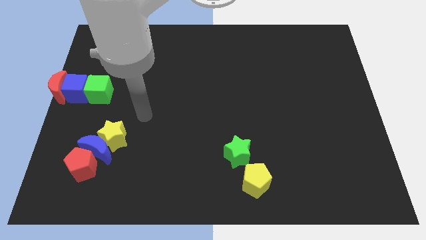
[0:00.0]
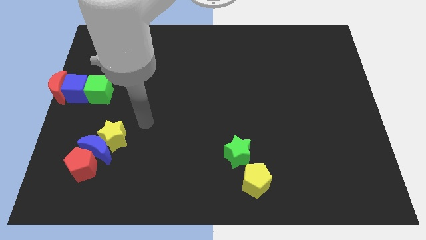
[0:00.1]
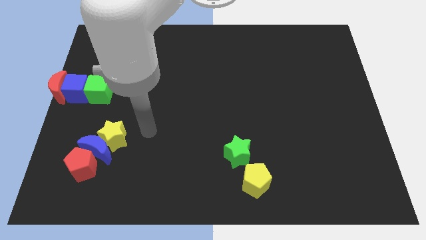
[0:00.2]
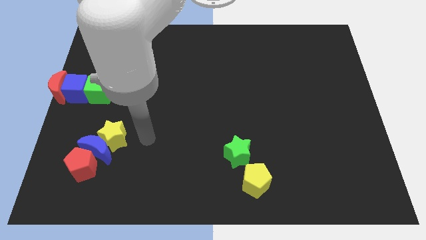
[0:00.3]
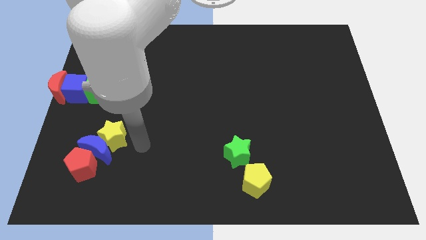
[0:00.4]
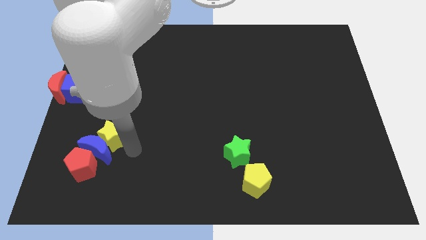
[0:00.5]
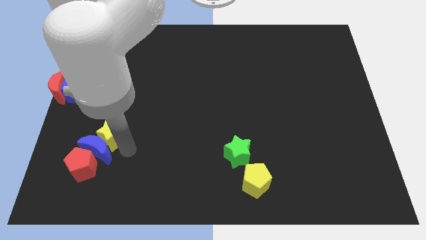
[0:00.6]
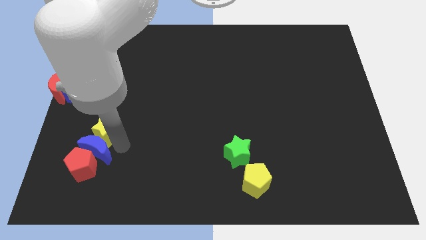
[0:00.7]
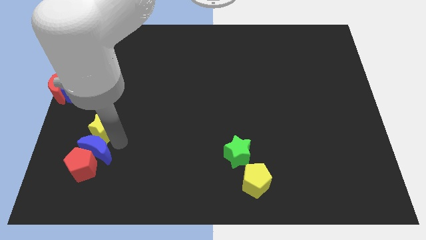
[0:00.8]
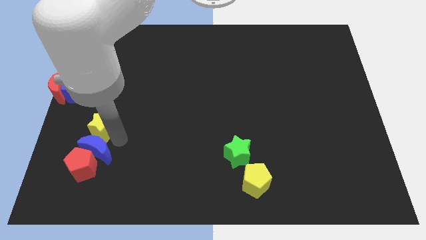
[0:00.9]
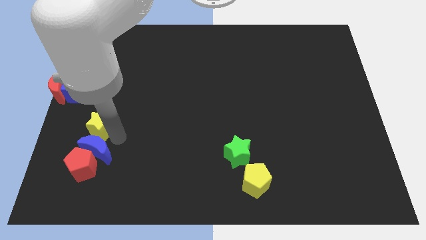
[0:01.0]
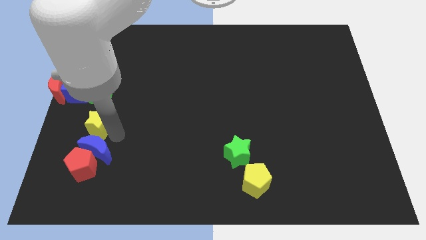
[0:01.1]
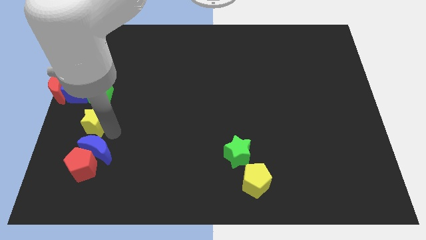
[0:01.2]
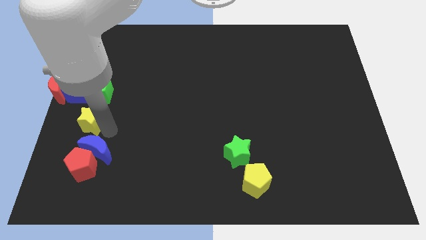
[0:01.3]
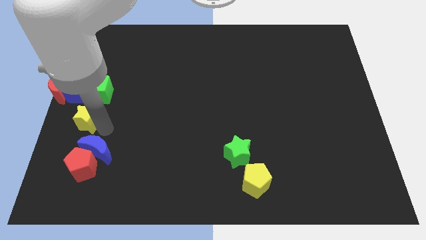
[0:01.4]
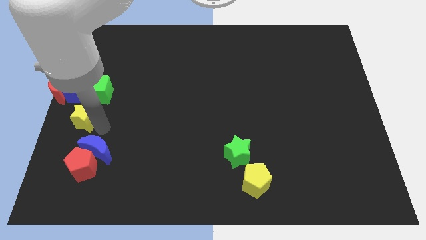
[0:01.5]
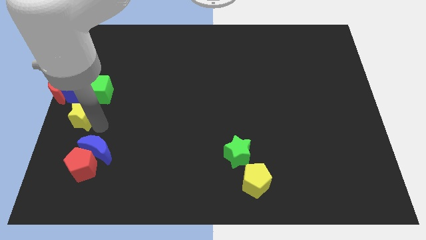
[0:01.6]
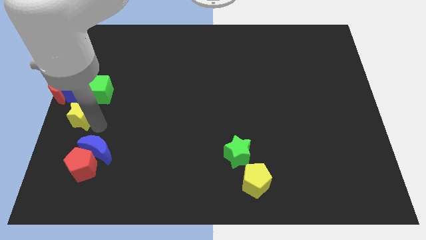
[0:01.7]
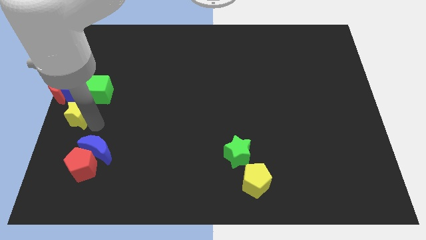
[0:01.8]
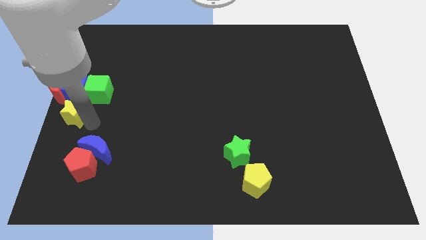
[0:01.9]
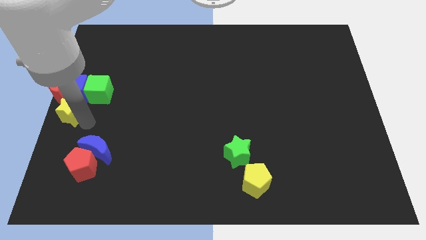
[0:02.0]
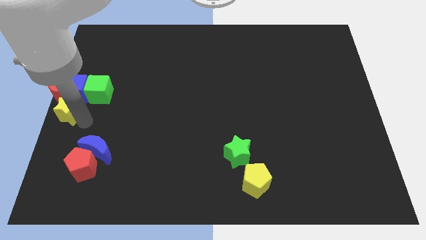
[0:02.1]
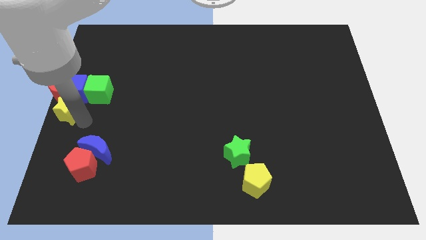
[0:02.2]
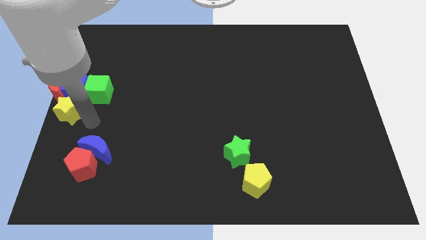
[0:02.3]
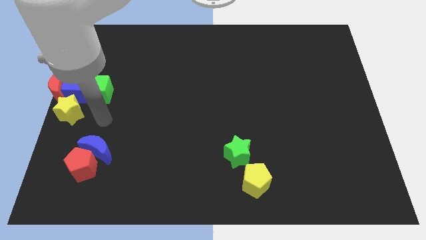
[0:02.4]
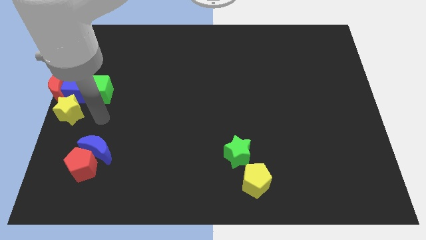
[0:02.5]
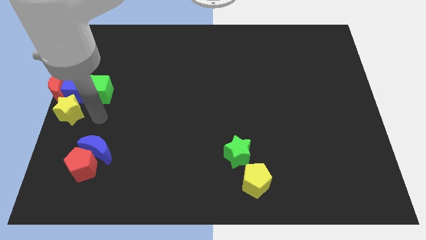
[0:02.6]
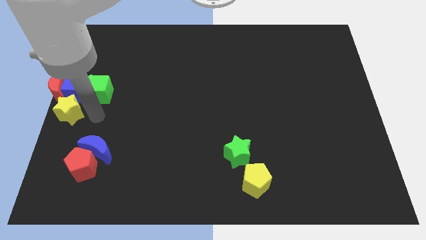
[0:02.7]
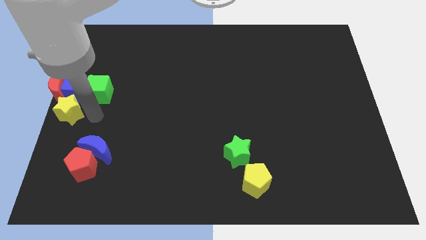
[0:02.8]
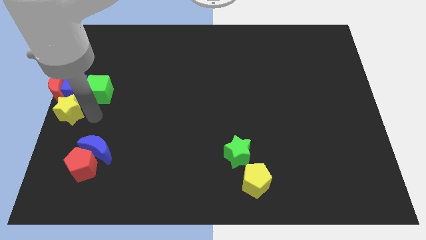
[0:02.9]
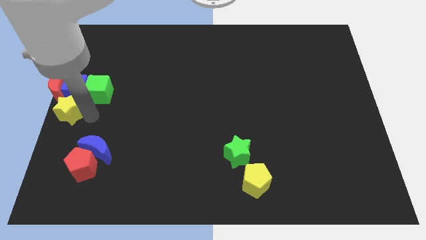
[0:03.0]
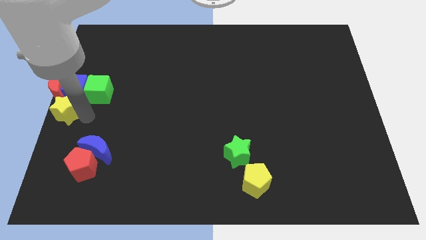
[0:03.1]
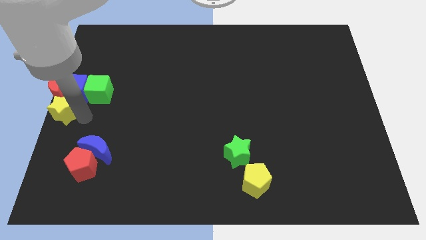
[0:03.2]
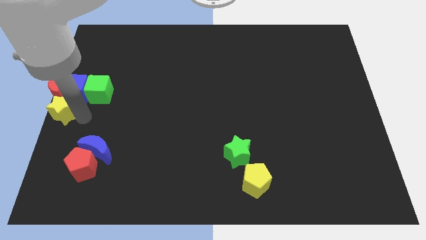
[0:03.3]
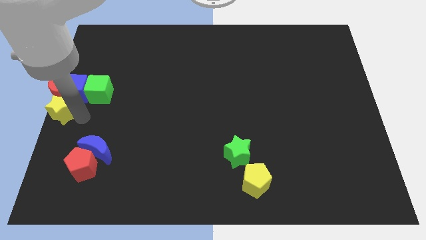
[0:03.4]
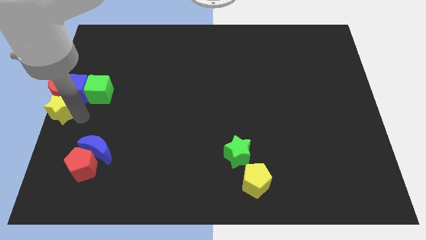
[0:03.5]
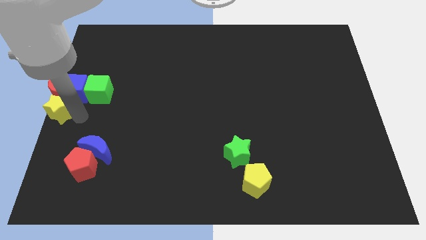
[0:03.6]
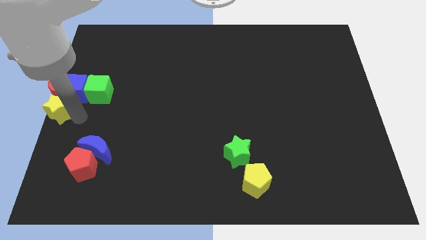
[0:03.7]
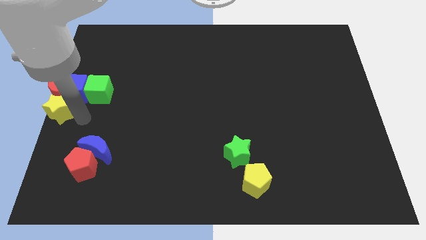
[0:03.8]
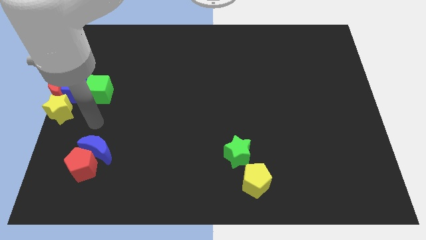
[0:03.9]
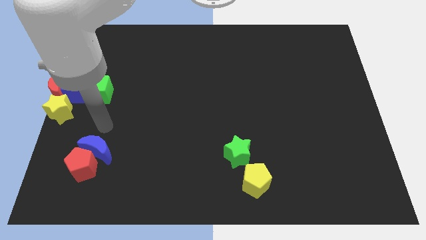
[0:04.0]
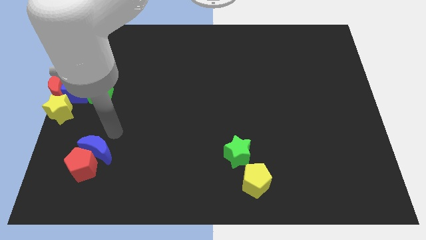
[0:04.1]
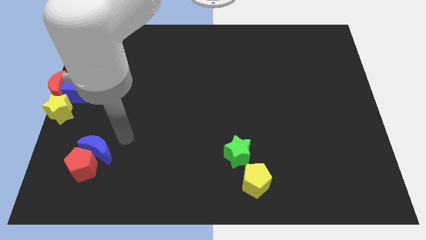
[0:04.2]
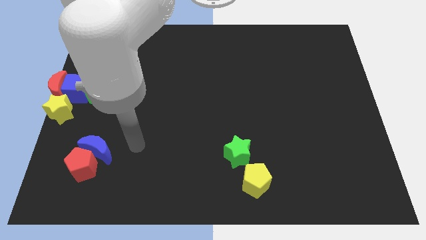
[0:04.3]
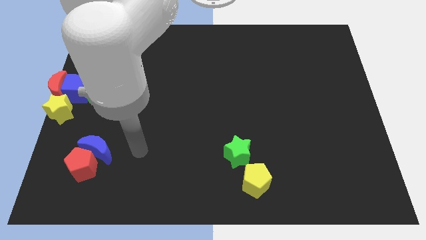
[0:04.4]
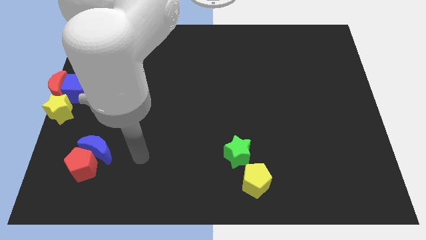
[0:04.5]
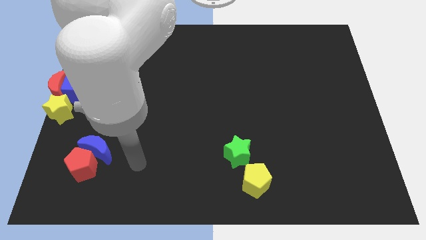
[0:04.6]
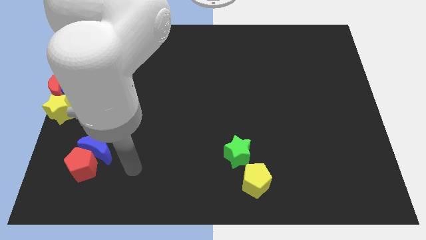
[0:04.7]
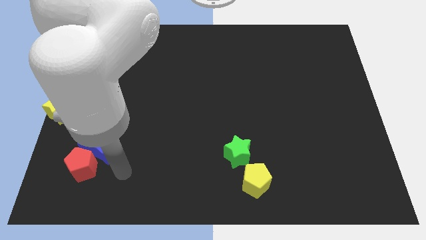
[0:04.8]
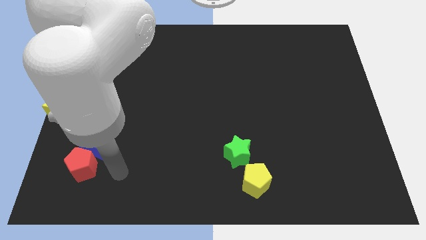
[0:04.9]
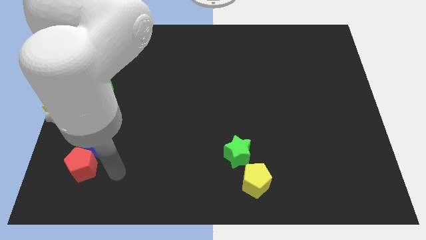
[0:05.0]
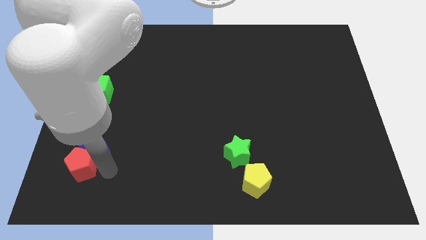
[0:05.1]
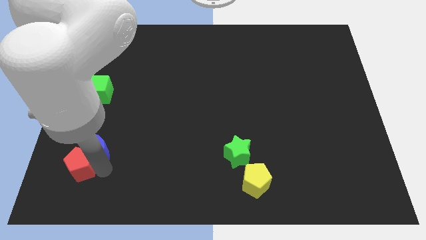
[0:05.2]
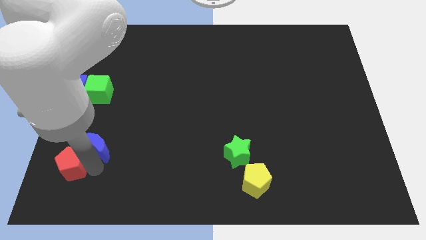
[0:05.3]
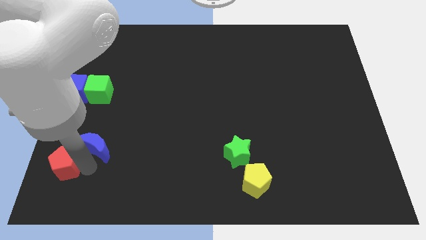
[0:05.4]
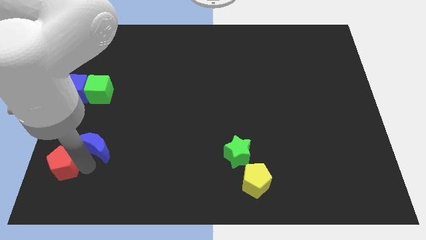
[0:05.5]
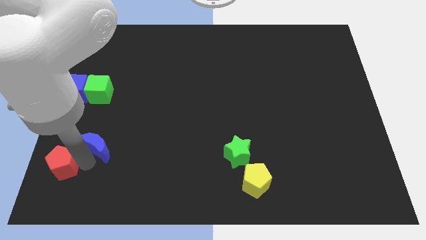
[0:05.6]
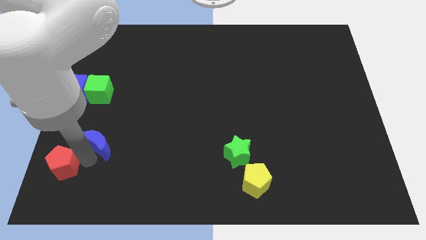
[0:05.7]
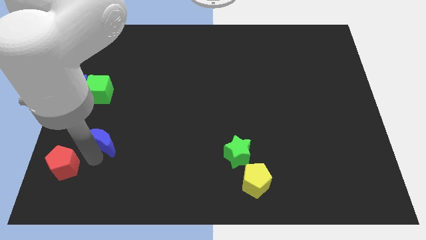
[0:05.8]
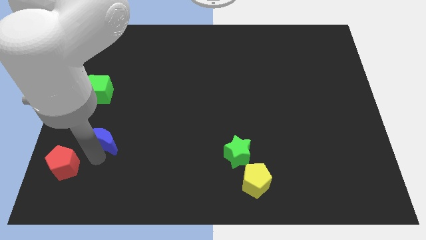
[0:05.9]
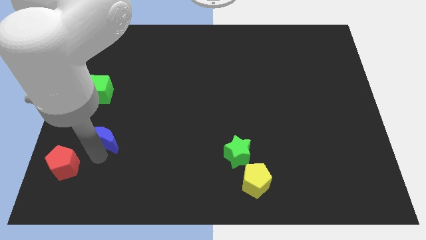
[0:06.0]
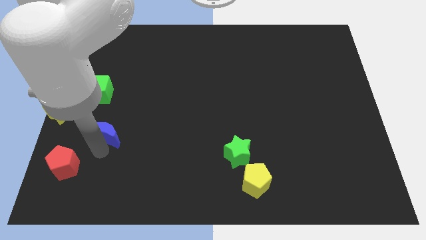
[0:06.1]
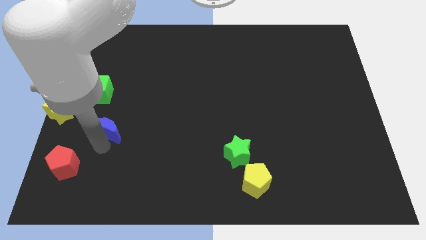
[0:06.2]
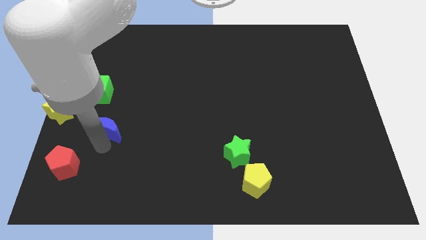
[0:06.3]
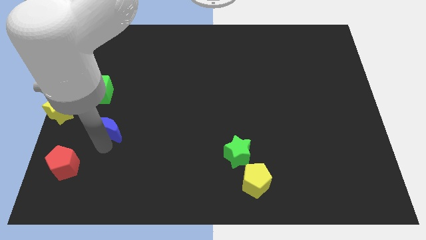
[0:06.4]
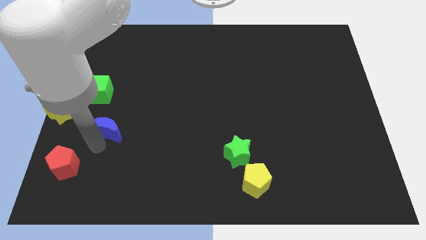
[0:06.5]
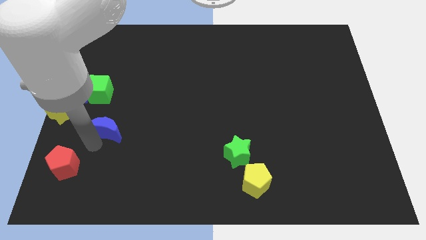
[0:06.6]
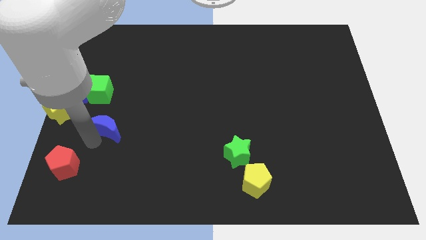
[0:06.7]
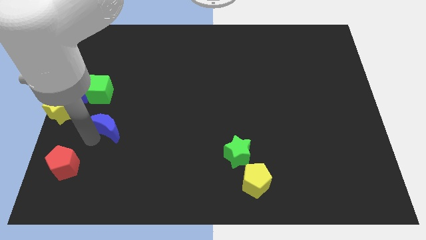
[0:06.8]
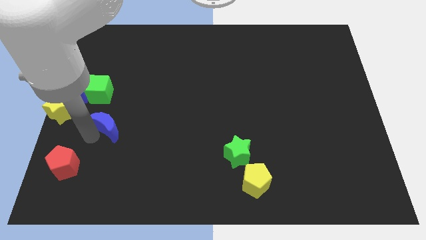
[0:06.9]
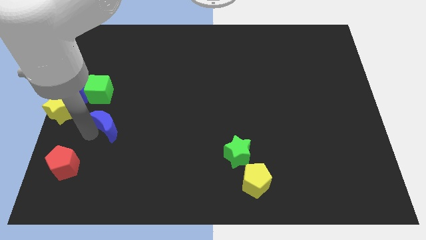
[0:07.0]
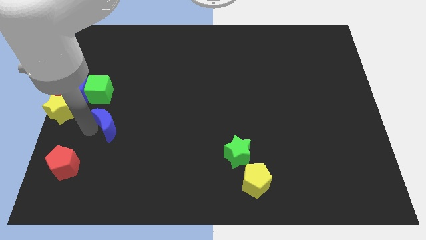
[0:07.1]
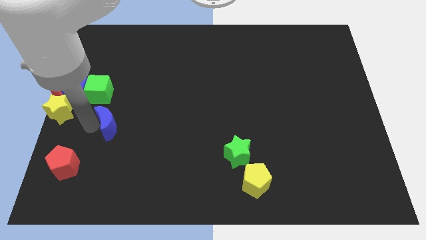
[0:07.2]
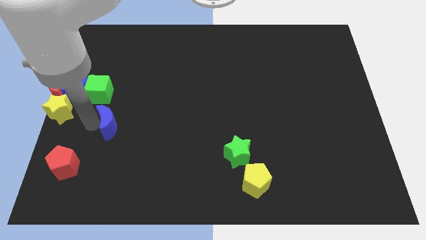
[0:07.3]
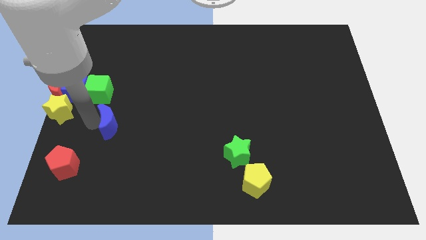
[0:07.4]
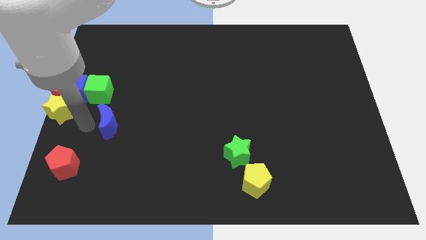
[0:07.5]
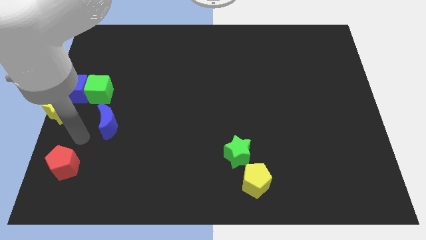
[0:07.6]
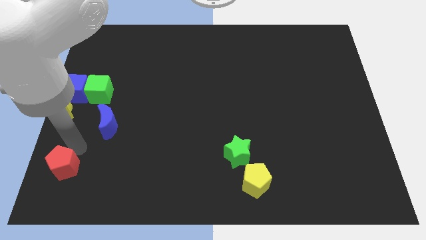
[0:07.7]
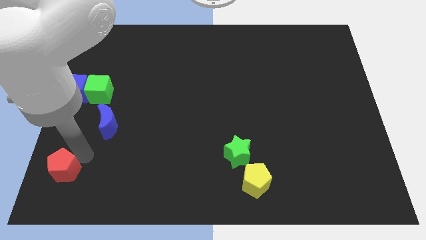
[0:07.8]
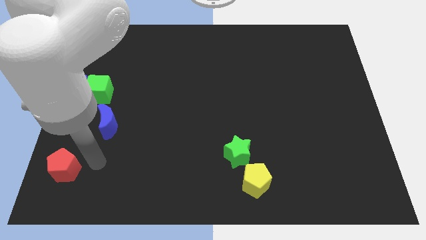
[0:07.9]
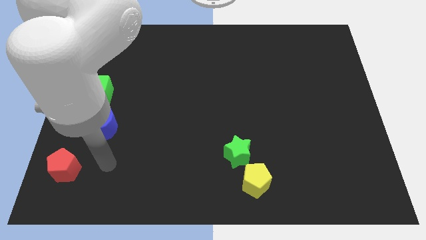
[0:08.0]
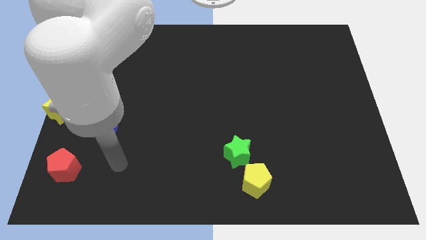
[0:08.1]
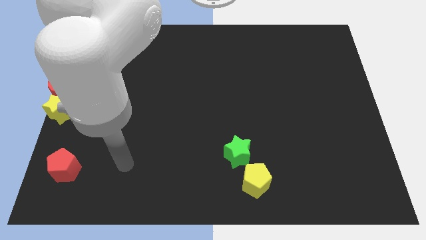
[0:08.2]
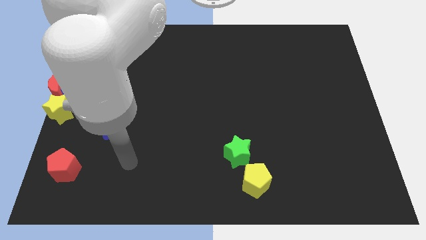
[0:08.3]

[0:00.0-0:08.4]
seperate the group of blocks that are in the diagonal line

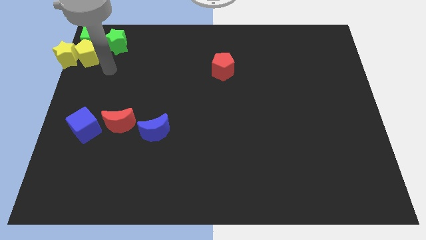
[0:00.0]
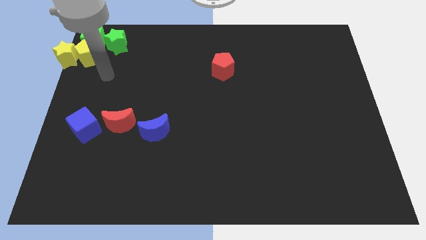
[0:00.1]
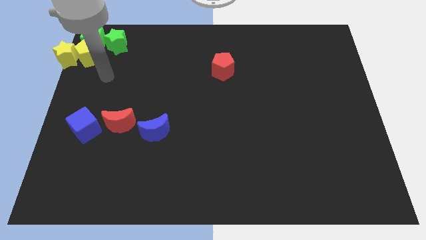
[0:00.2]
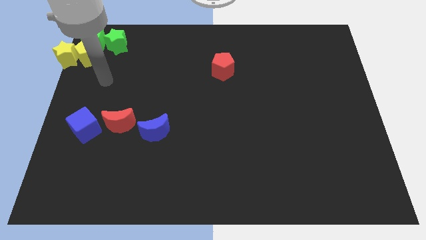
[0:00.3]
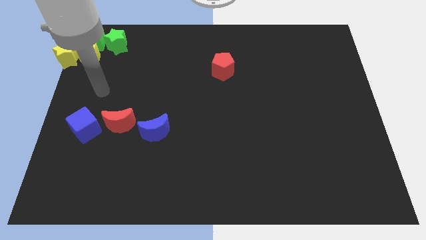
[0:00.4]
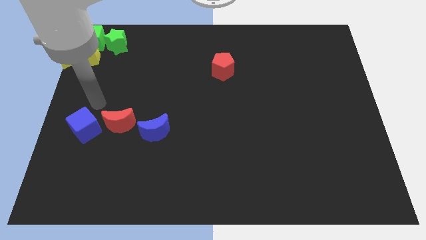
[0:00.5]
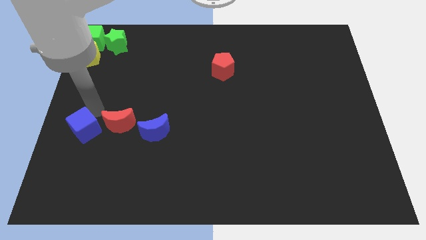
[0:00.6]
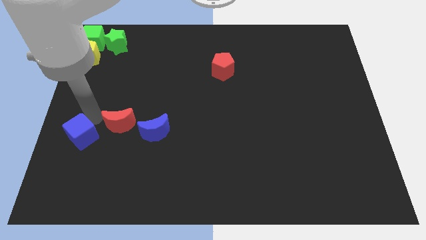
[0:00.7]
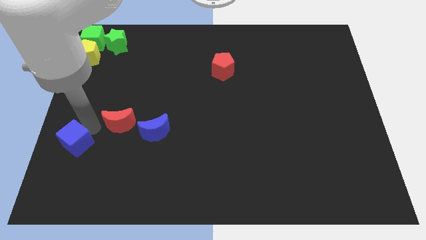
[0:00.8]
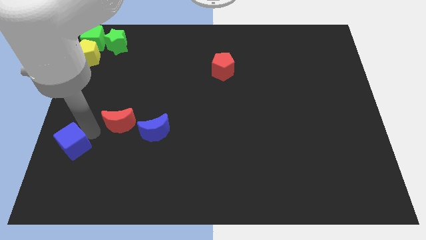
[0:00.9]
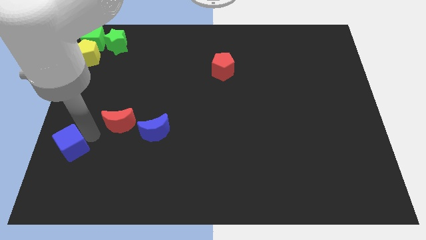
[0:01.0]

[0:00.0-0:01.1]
slightly push the blue cube towards the bottom side
